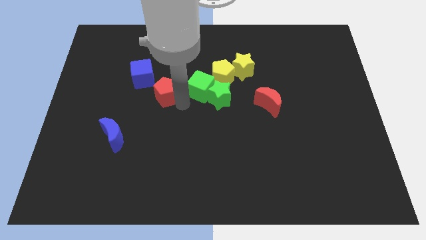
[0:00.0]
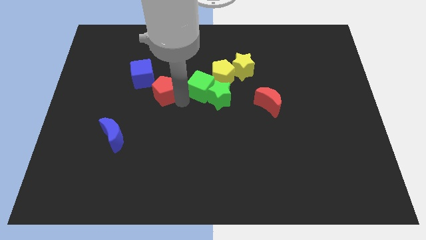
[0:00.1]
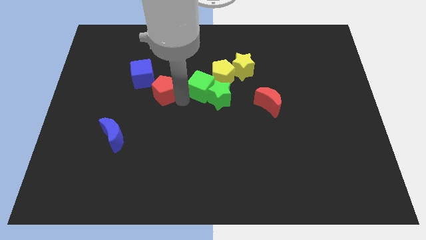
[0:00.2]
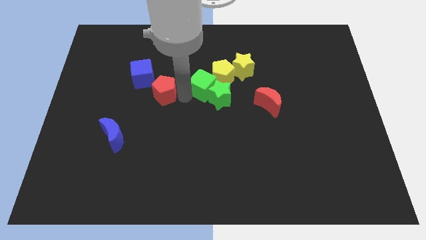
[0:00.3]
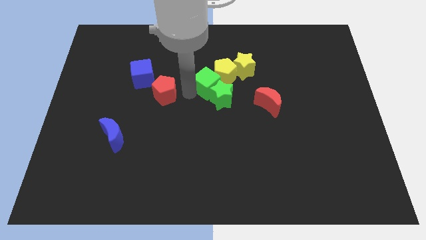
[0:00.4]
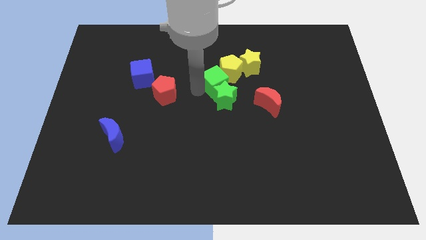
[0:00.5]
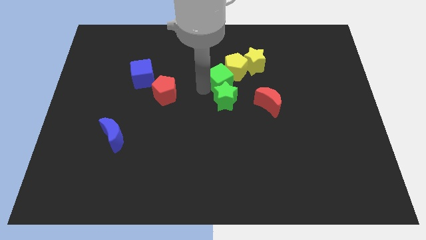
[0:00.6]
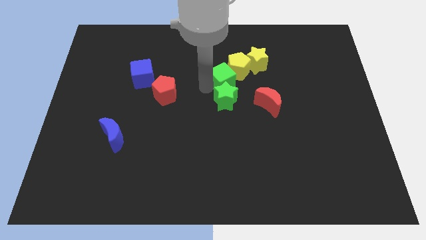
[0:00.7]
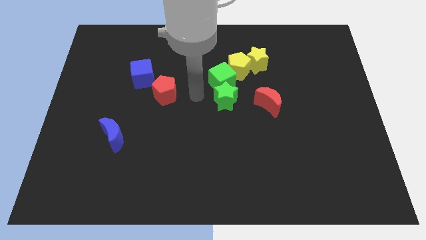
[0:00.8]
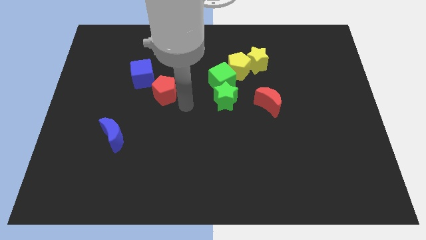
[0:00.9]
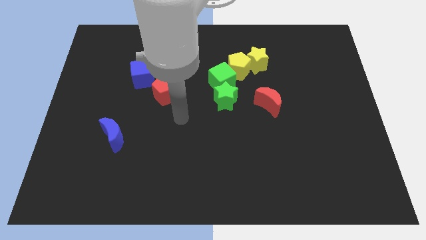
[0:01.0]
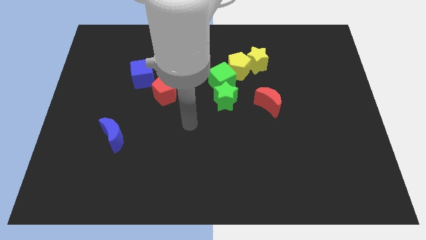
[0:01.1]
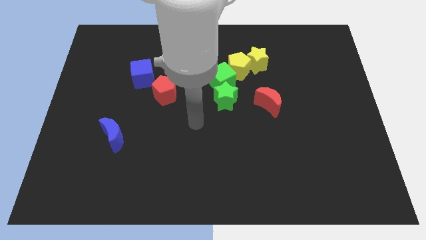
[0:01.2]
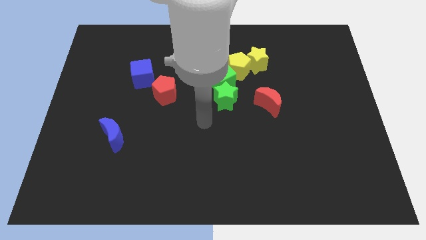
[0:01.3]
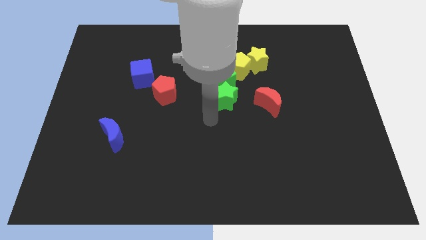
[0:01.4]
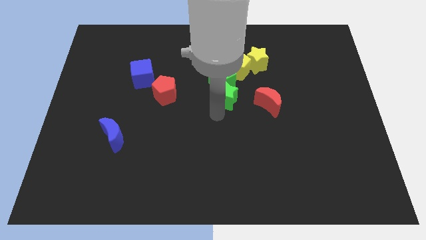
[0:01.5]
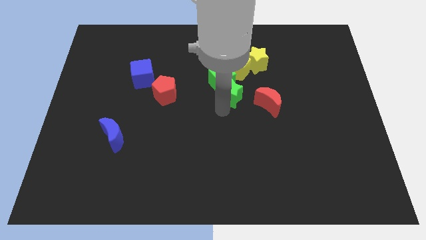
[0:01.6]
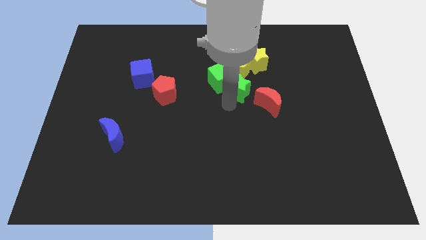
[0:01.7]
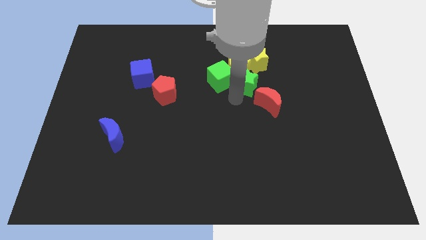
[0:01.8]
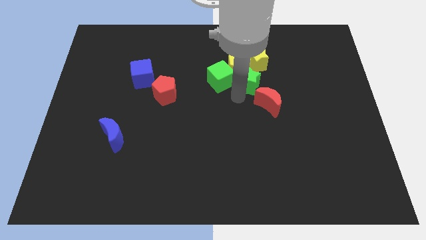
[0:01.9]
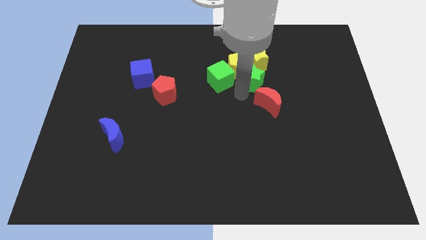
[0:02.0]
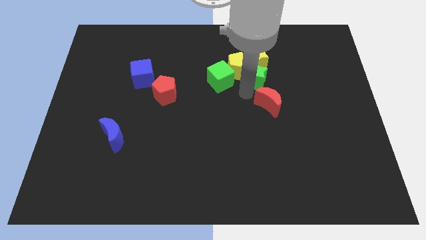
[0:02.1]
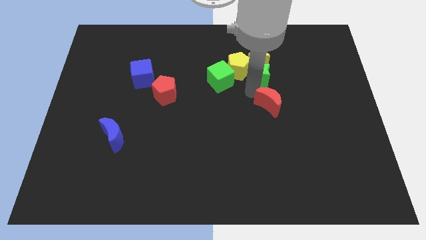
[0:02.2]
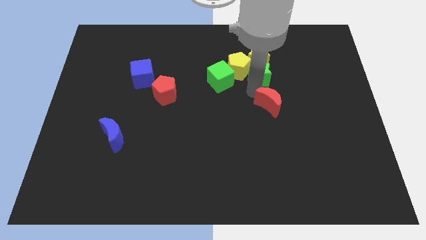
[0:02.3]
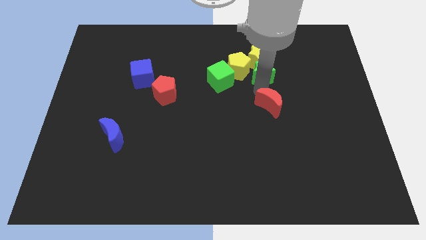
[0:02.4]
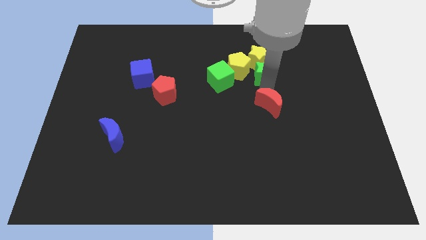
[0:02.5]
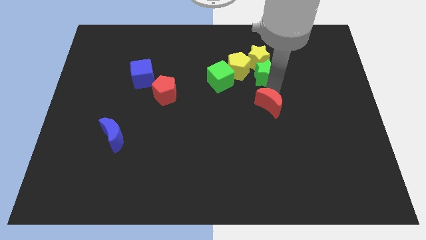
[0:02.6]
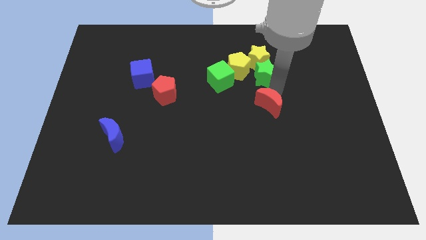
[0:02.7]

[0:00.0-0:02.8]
push the group of green and yellow blocks towards the top right of the board

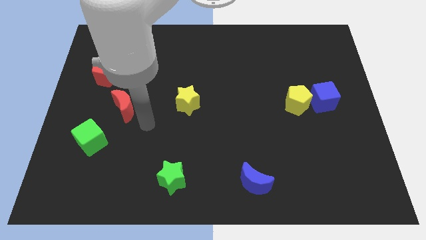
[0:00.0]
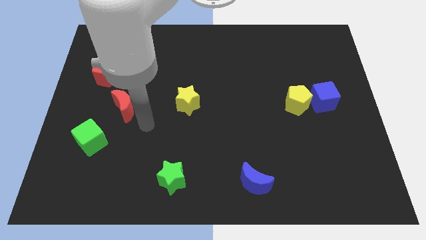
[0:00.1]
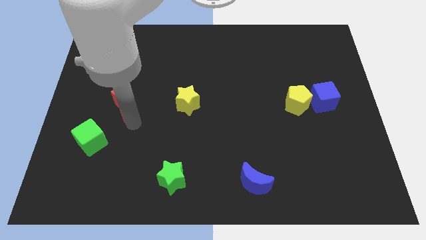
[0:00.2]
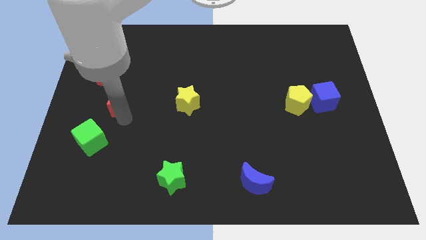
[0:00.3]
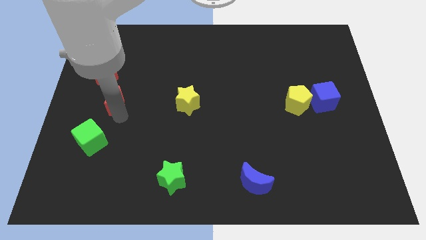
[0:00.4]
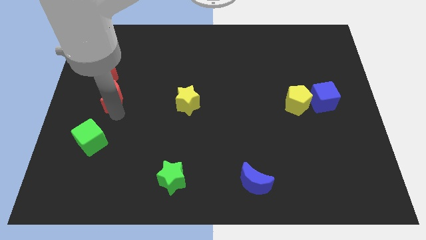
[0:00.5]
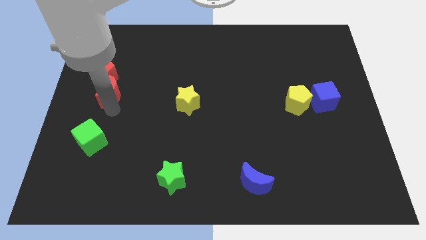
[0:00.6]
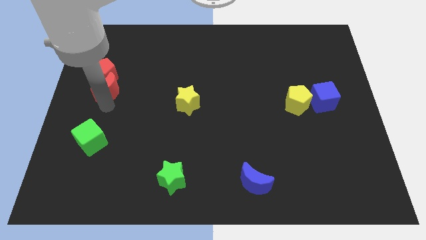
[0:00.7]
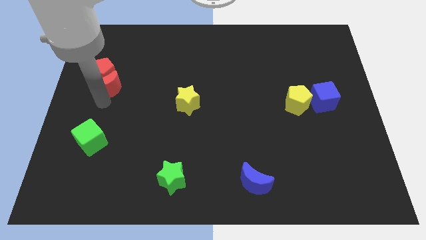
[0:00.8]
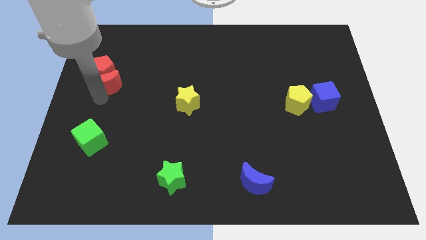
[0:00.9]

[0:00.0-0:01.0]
place the red moon into the red pentagon

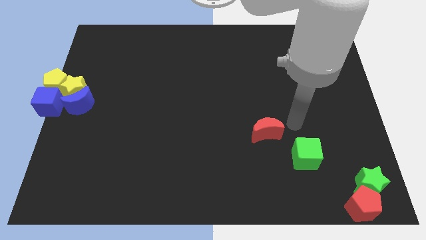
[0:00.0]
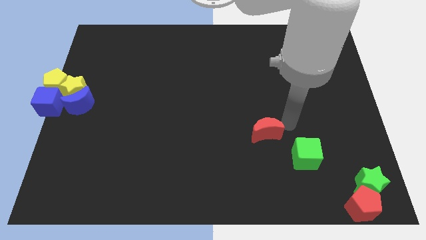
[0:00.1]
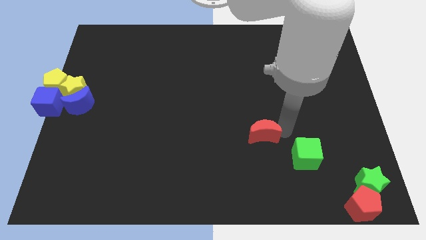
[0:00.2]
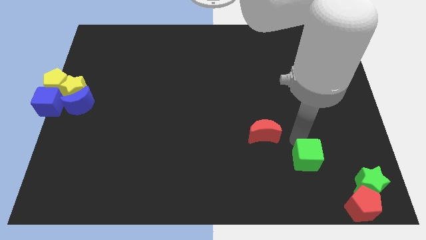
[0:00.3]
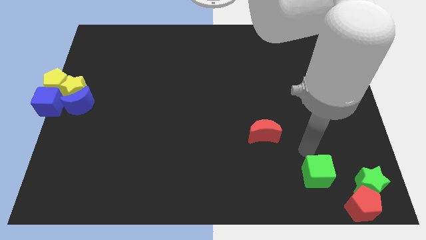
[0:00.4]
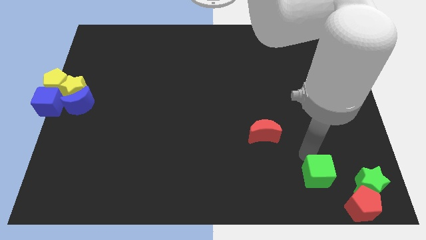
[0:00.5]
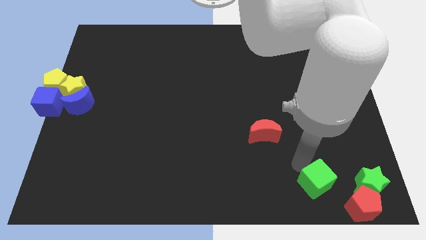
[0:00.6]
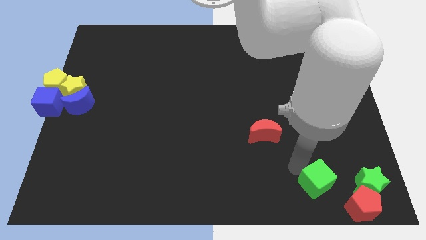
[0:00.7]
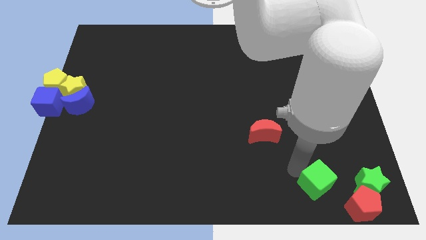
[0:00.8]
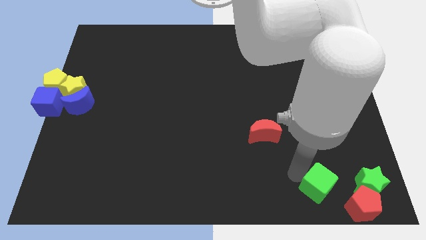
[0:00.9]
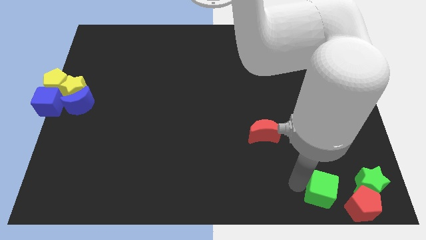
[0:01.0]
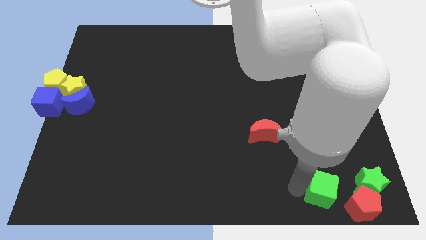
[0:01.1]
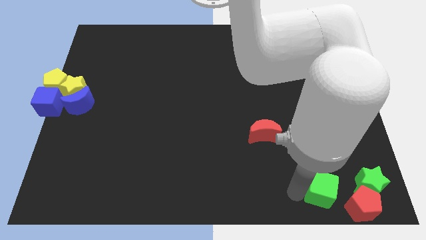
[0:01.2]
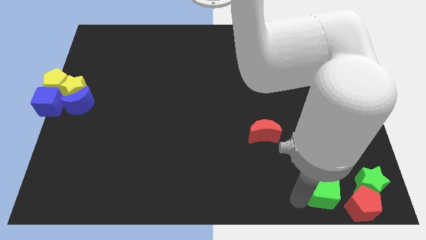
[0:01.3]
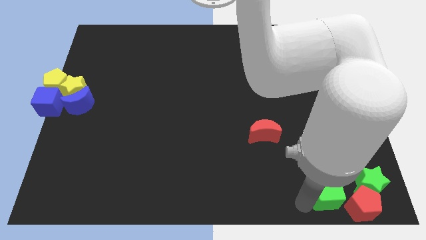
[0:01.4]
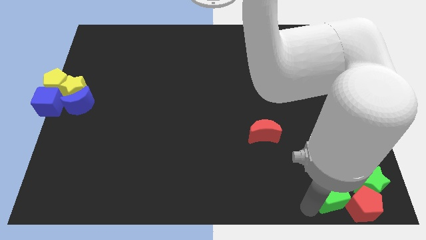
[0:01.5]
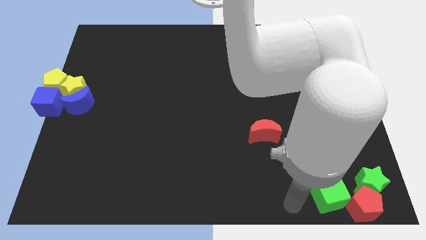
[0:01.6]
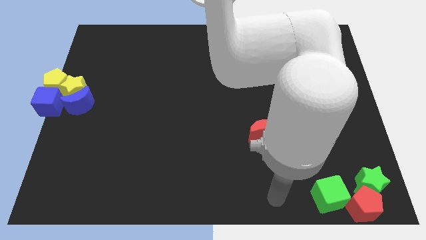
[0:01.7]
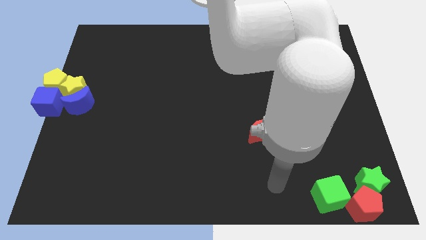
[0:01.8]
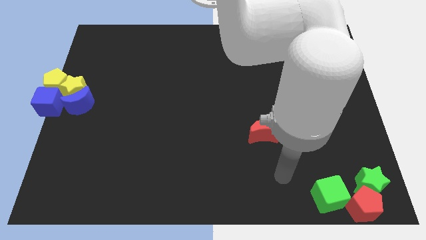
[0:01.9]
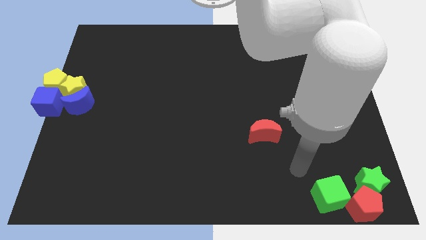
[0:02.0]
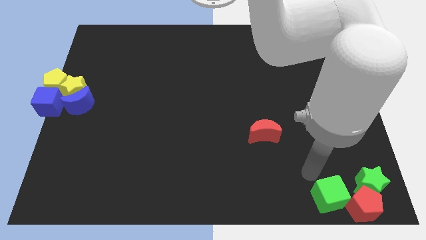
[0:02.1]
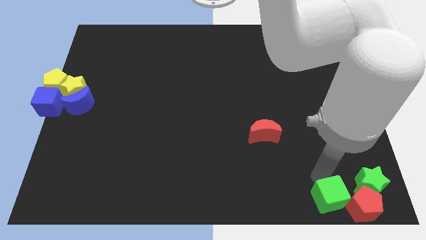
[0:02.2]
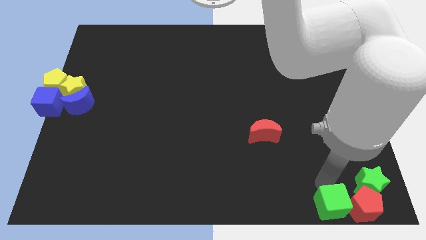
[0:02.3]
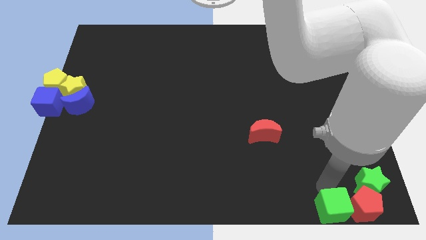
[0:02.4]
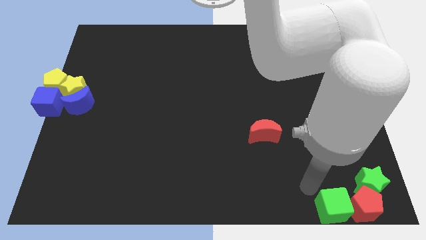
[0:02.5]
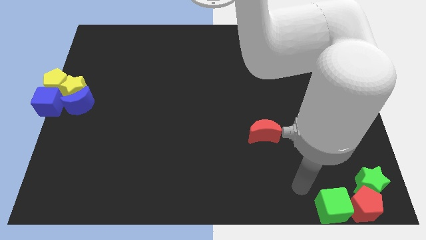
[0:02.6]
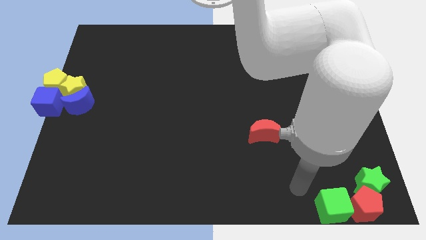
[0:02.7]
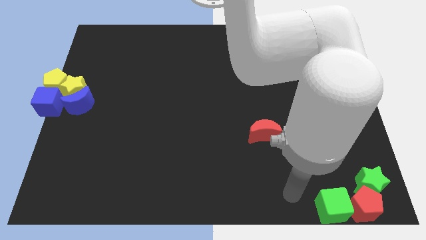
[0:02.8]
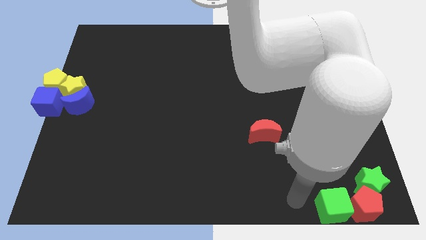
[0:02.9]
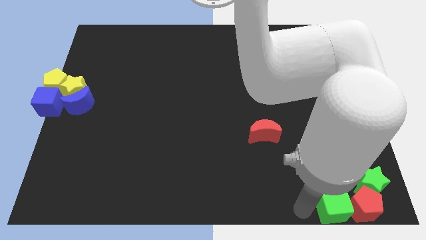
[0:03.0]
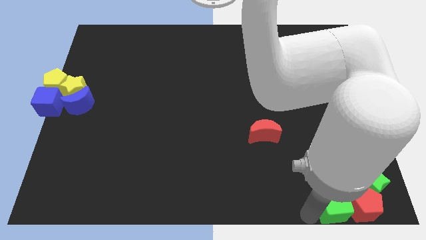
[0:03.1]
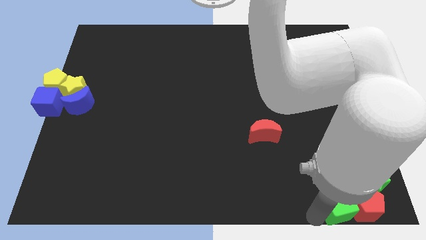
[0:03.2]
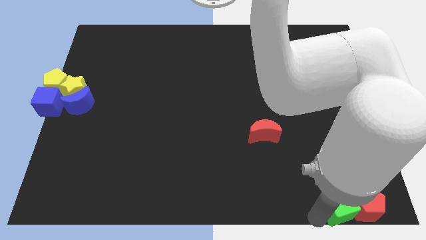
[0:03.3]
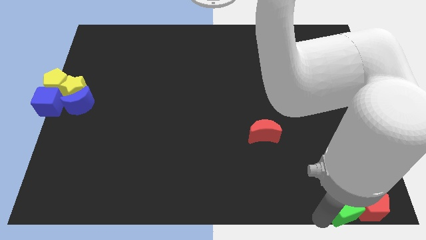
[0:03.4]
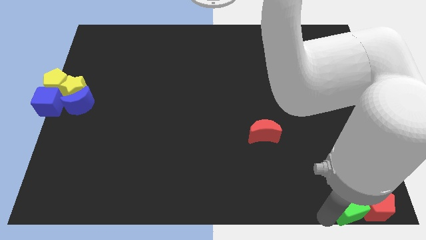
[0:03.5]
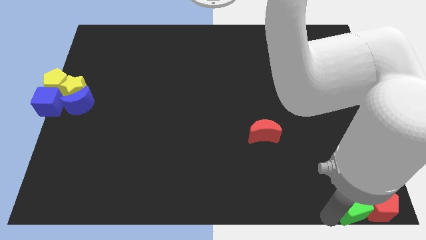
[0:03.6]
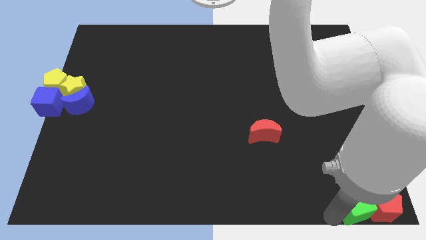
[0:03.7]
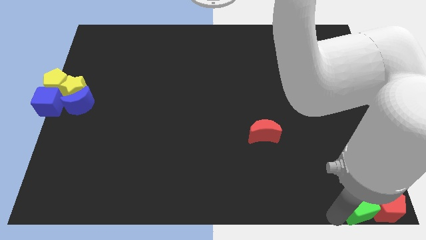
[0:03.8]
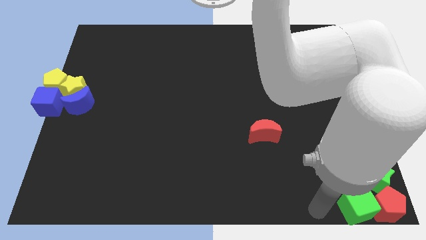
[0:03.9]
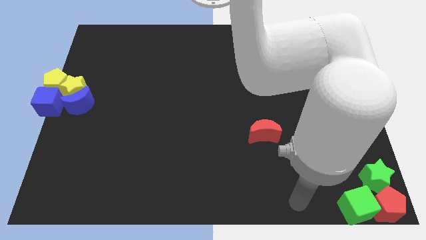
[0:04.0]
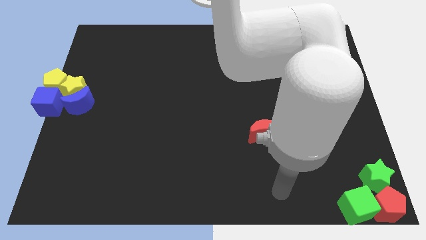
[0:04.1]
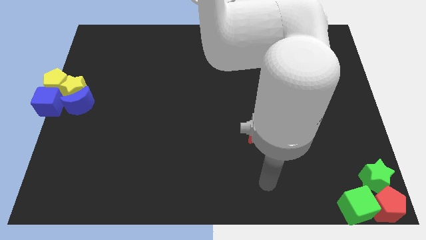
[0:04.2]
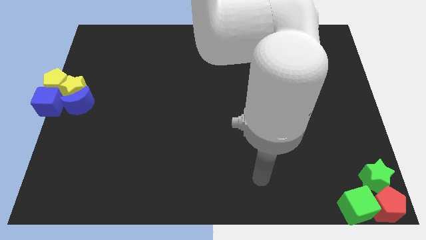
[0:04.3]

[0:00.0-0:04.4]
push the green cube into the red pentagon to the bottom right of the board

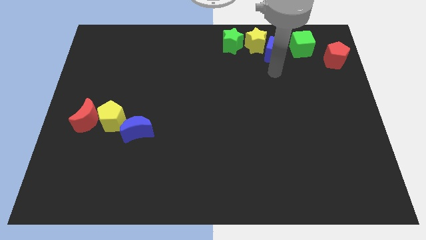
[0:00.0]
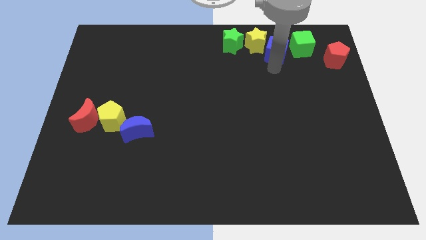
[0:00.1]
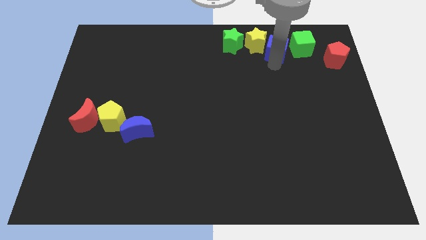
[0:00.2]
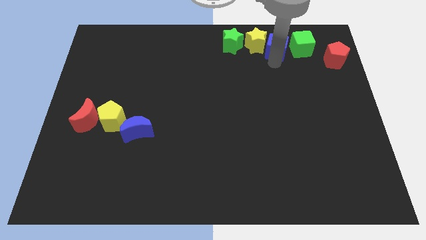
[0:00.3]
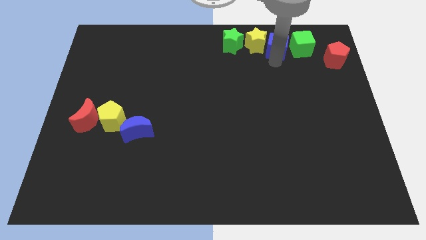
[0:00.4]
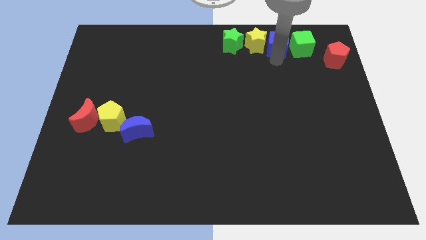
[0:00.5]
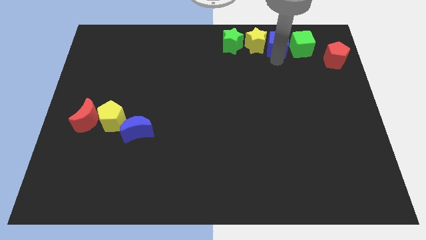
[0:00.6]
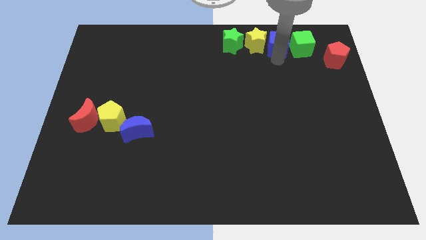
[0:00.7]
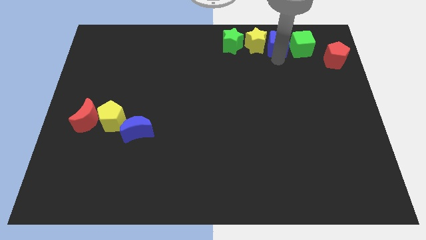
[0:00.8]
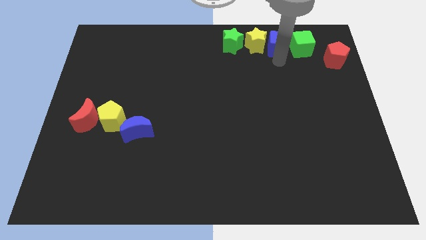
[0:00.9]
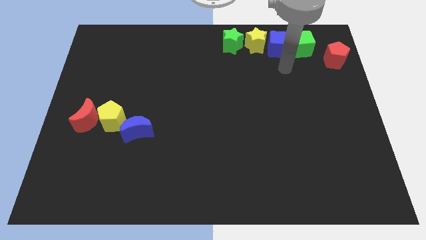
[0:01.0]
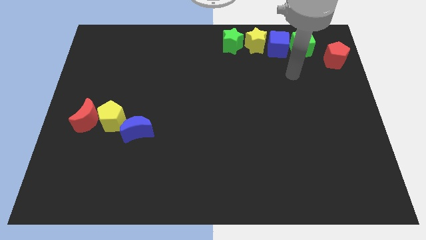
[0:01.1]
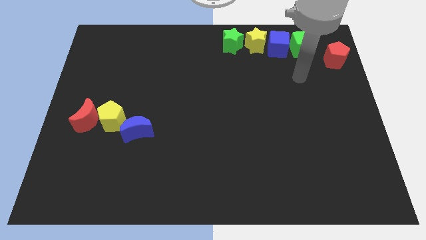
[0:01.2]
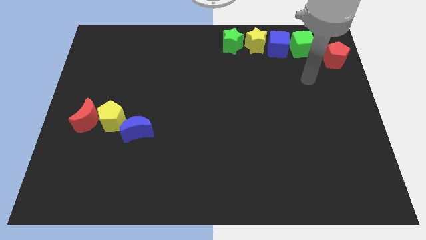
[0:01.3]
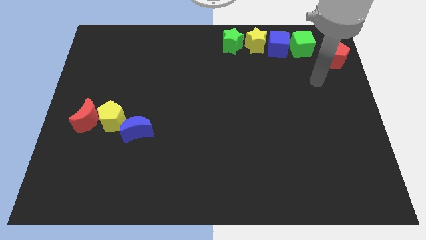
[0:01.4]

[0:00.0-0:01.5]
place the blue cube horizontally in between the green cube and yellow star
